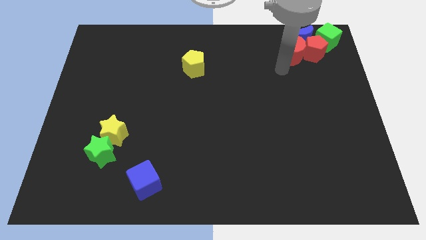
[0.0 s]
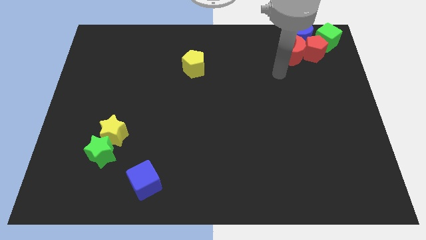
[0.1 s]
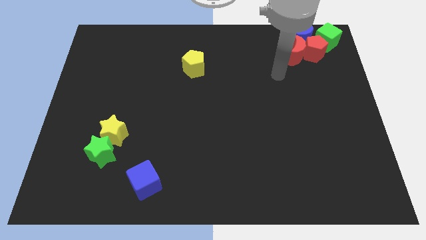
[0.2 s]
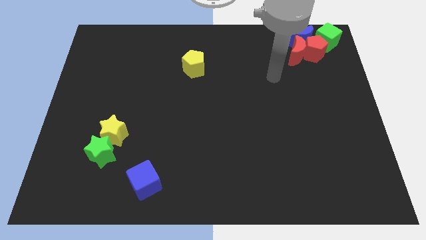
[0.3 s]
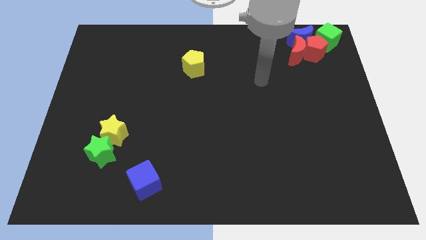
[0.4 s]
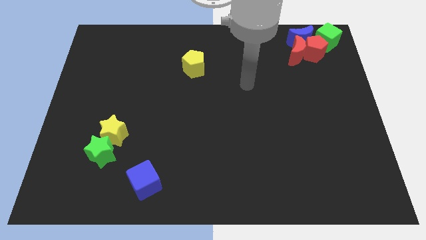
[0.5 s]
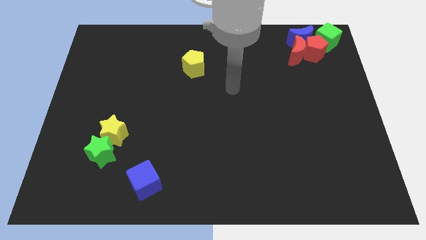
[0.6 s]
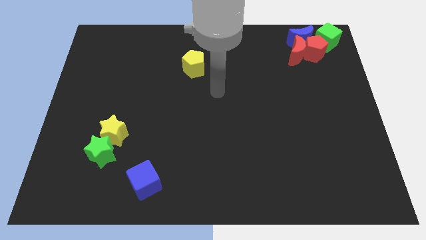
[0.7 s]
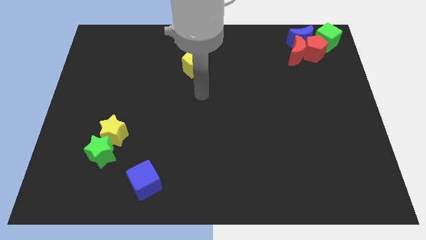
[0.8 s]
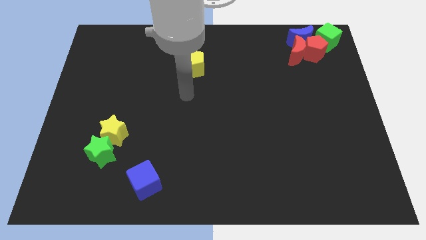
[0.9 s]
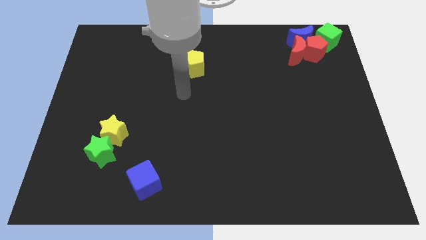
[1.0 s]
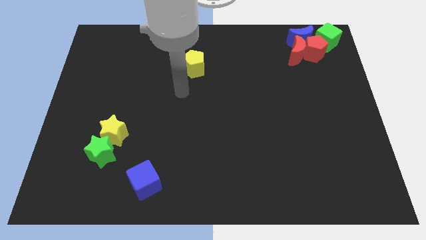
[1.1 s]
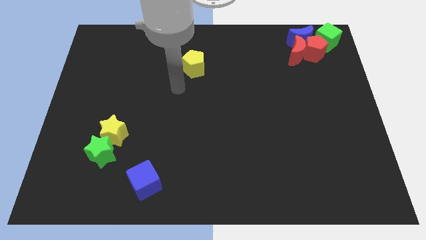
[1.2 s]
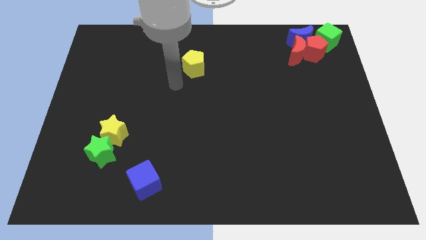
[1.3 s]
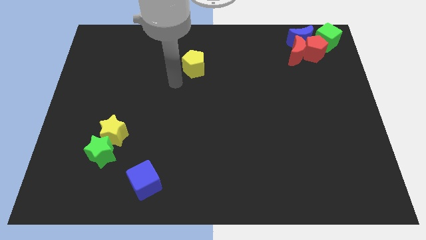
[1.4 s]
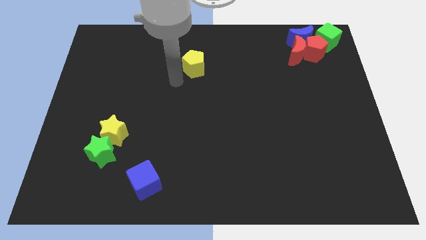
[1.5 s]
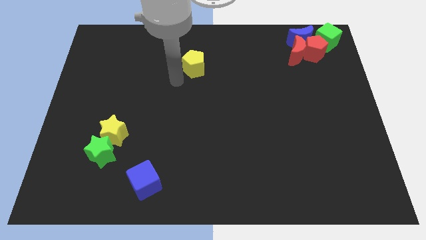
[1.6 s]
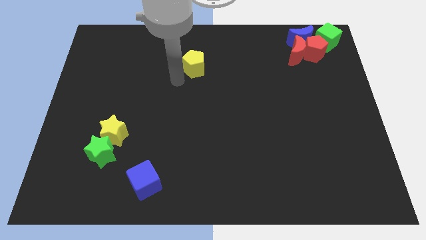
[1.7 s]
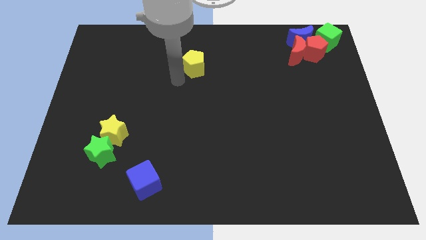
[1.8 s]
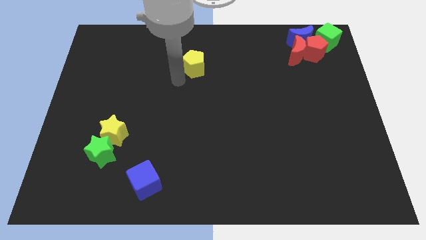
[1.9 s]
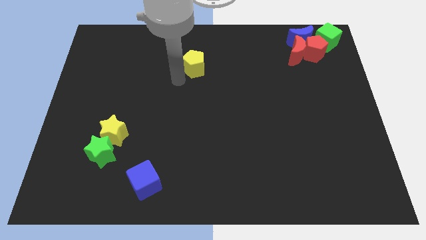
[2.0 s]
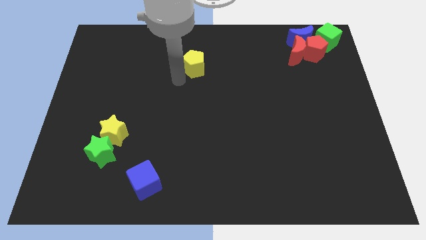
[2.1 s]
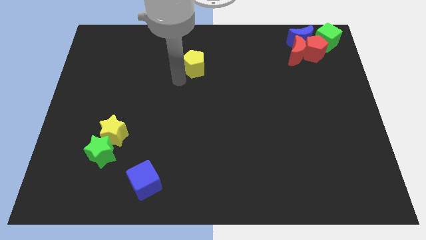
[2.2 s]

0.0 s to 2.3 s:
move your arm diagonal below the yellow pentagon

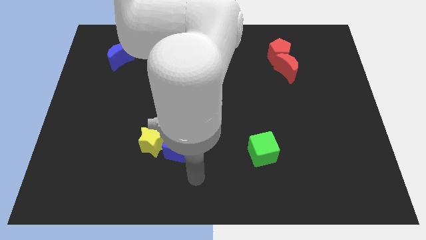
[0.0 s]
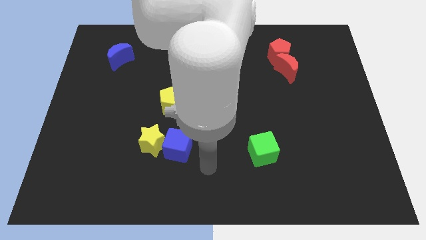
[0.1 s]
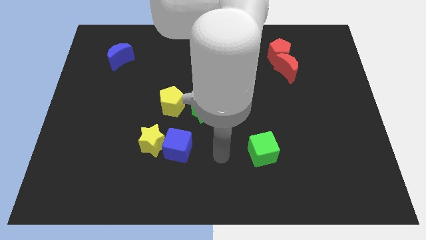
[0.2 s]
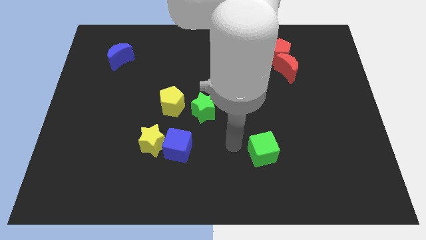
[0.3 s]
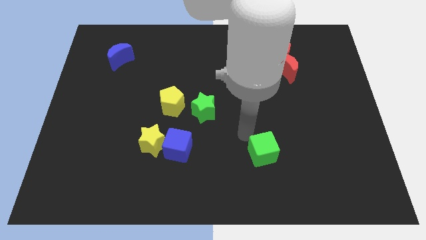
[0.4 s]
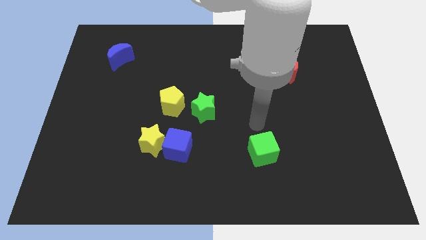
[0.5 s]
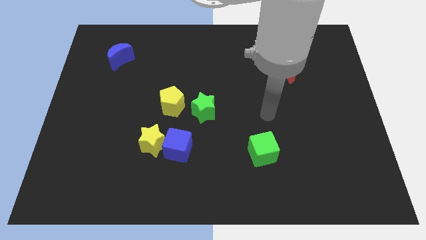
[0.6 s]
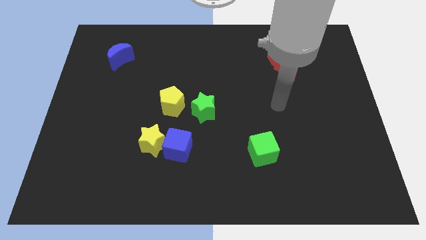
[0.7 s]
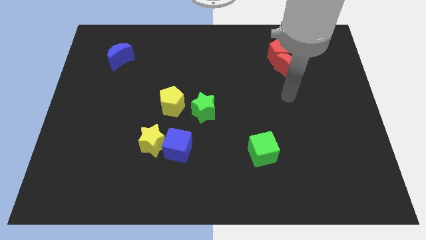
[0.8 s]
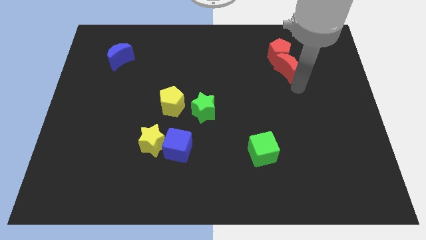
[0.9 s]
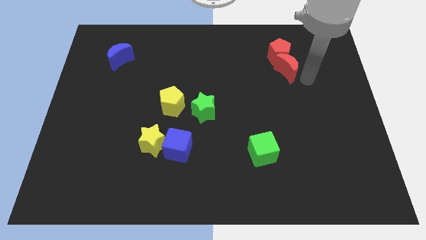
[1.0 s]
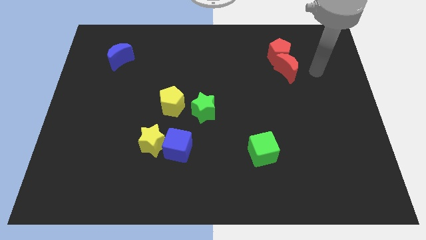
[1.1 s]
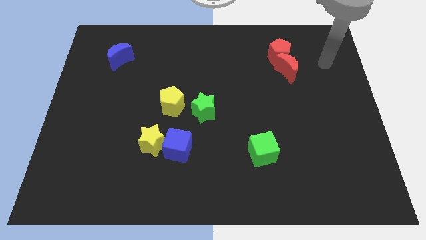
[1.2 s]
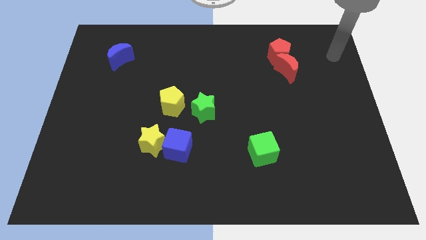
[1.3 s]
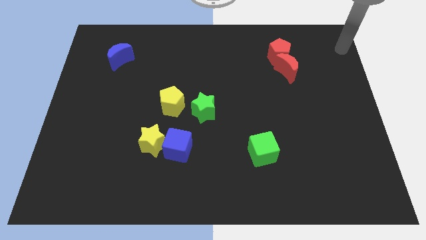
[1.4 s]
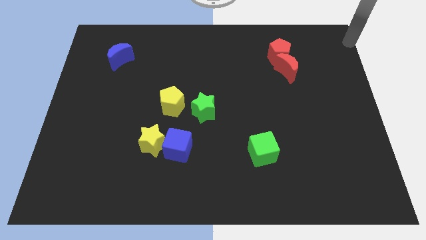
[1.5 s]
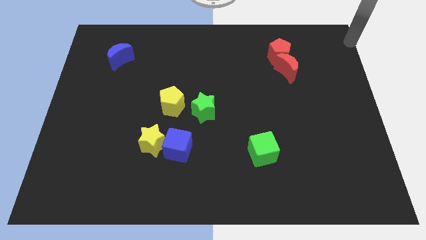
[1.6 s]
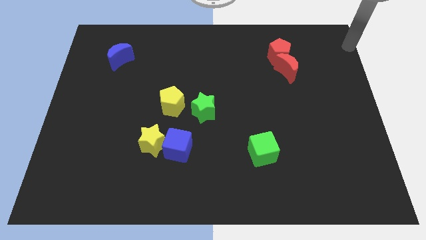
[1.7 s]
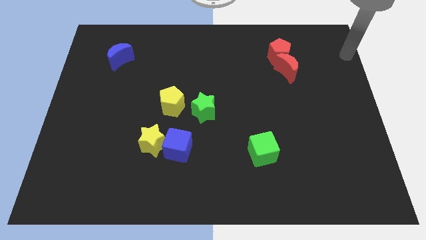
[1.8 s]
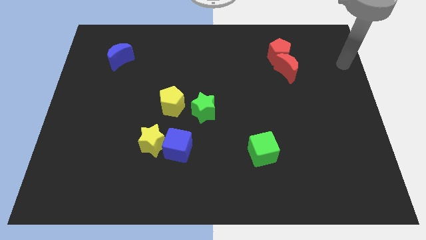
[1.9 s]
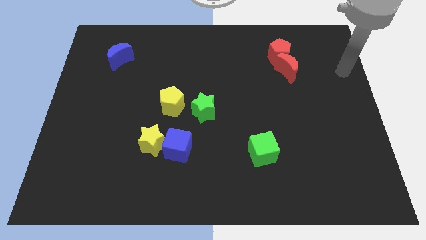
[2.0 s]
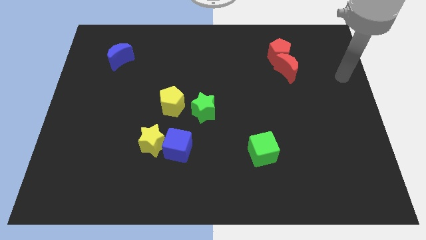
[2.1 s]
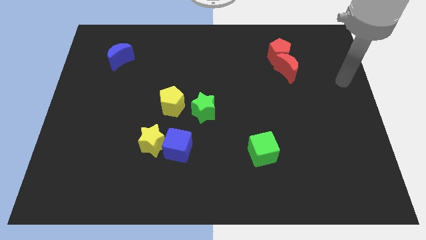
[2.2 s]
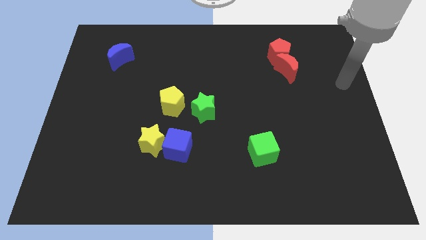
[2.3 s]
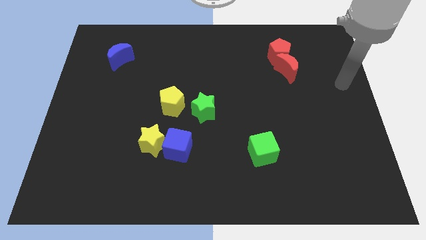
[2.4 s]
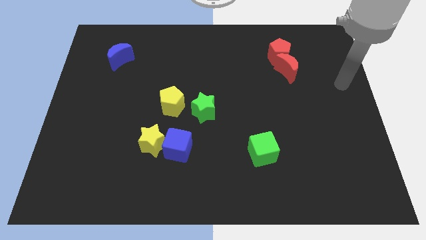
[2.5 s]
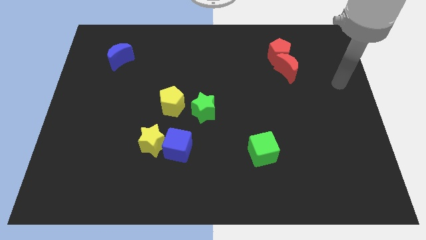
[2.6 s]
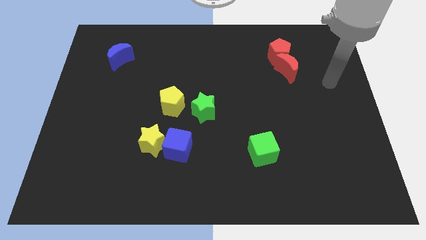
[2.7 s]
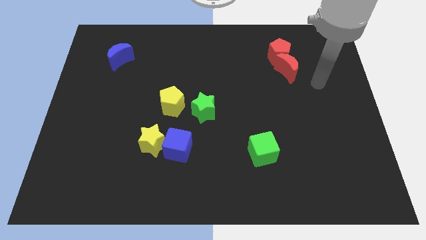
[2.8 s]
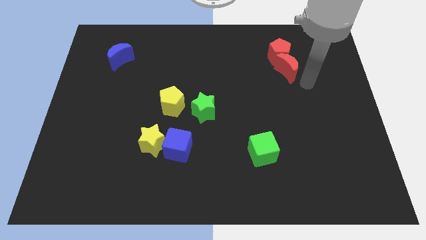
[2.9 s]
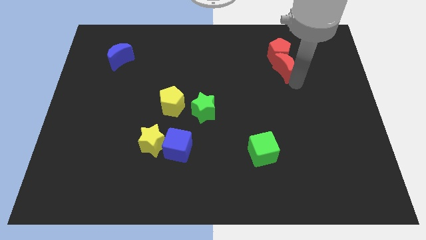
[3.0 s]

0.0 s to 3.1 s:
touch the red crescent at the bottom side

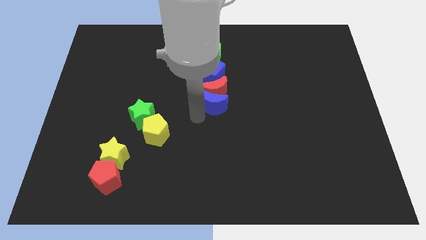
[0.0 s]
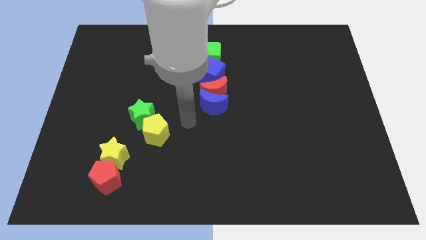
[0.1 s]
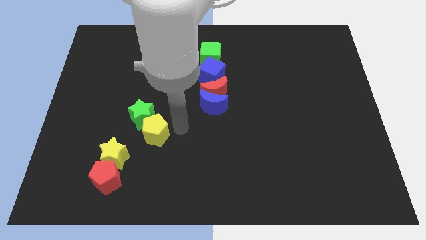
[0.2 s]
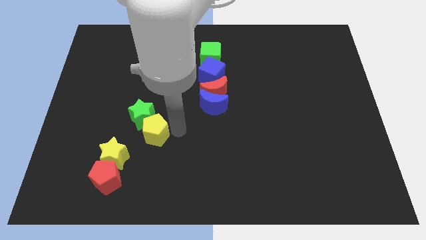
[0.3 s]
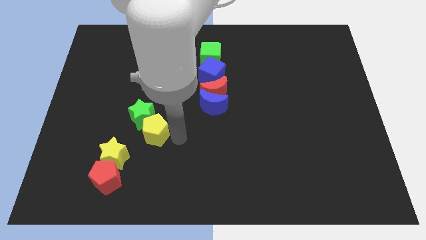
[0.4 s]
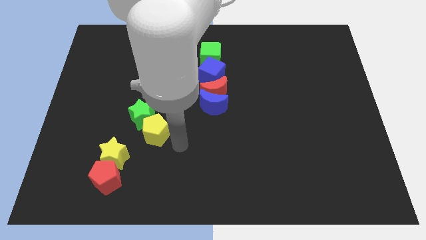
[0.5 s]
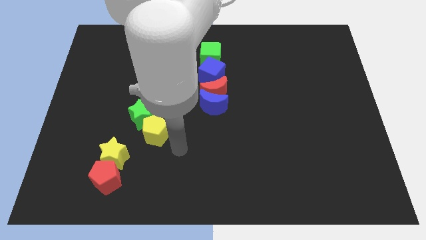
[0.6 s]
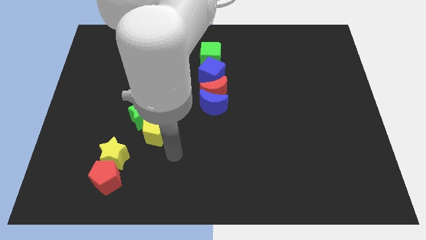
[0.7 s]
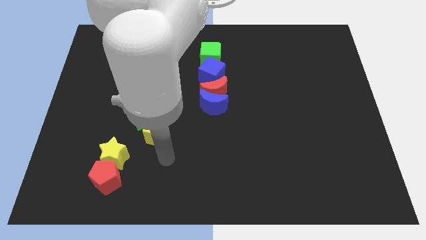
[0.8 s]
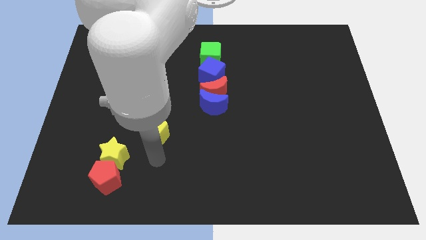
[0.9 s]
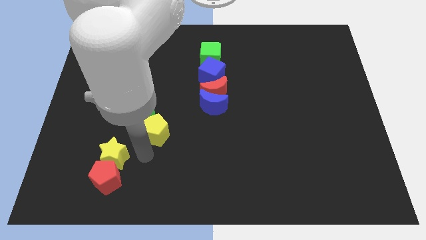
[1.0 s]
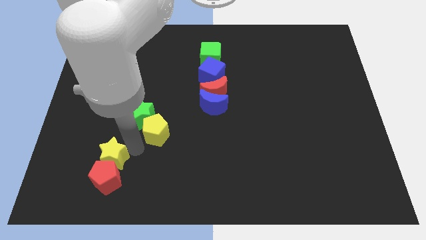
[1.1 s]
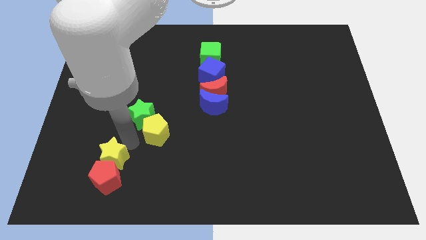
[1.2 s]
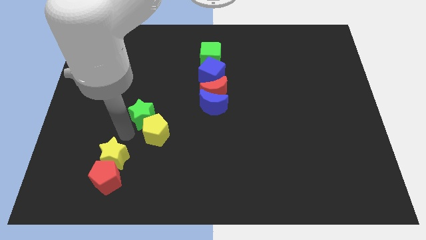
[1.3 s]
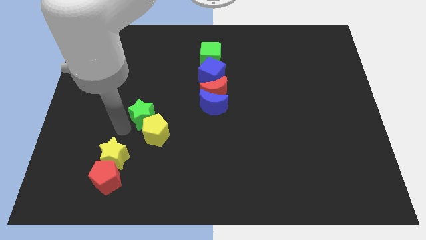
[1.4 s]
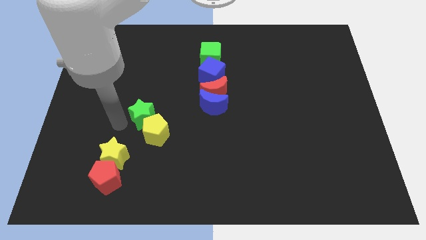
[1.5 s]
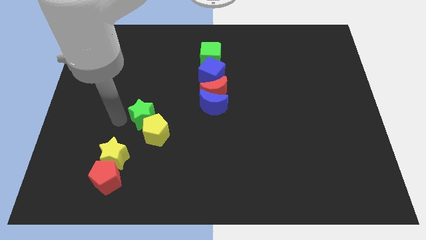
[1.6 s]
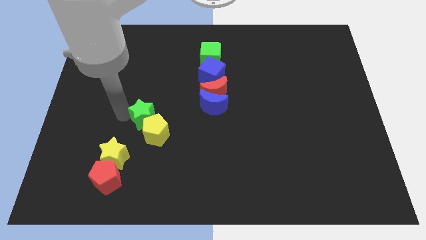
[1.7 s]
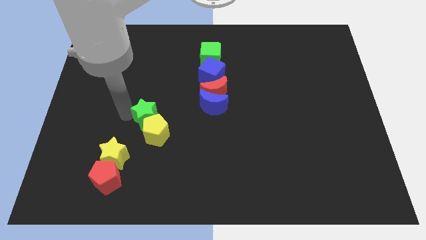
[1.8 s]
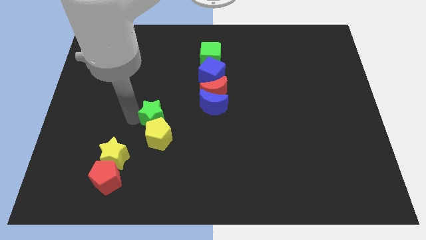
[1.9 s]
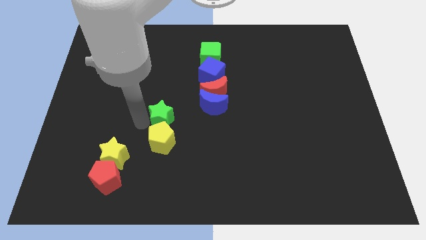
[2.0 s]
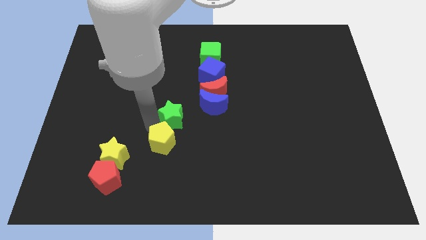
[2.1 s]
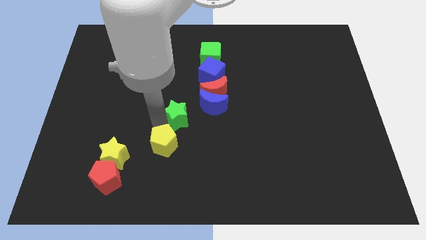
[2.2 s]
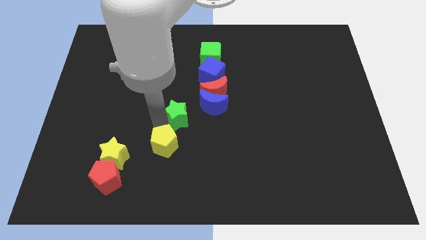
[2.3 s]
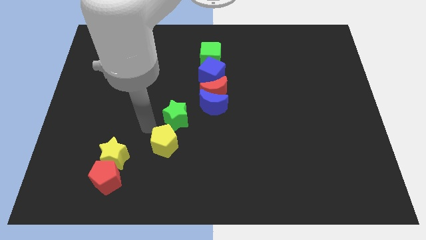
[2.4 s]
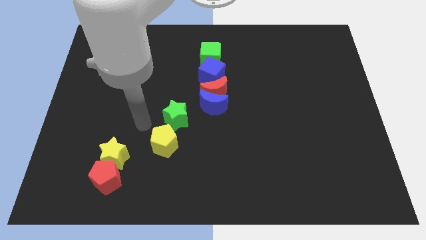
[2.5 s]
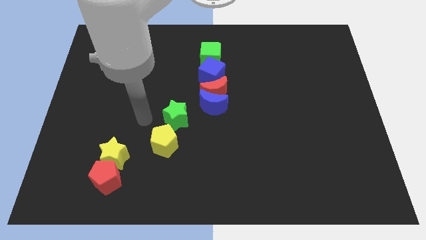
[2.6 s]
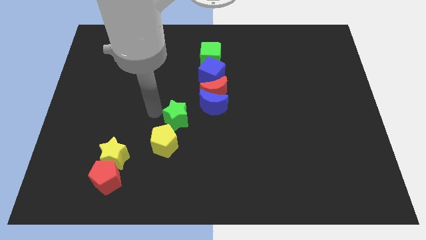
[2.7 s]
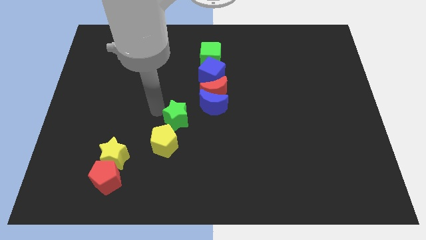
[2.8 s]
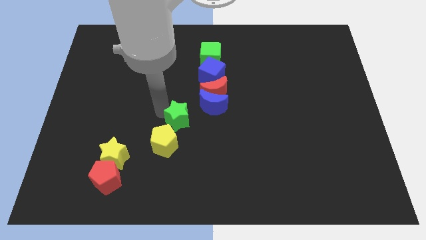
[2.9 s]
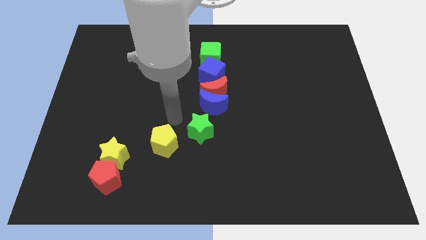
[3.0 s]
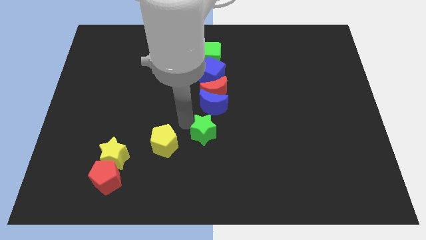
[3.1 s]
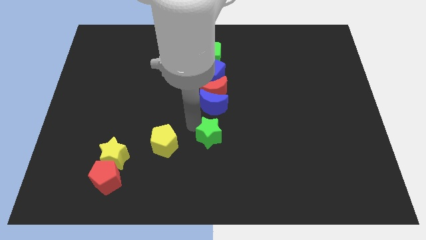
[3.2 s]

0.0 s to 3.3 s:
push the green star to the bottom of the blue crescent

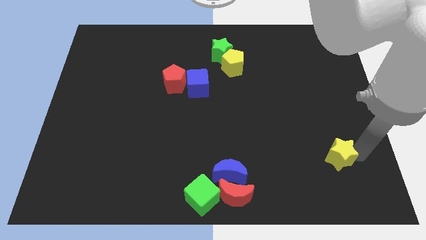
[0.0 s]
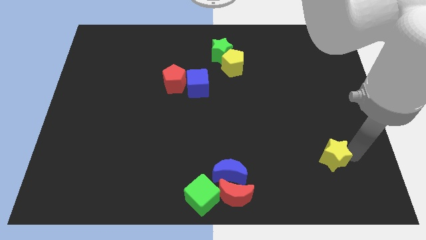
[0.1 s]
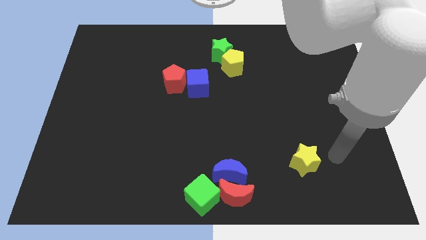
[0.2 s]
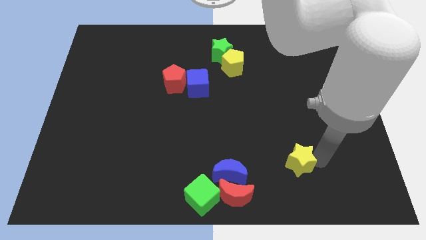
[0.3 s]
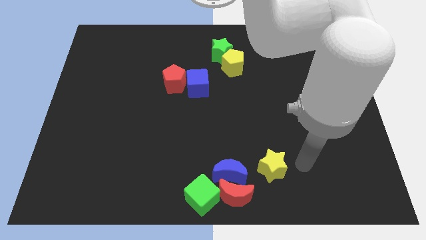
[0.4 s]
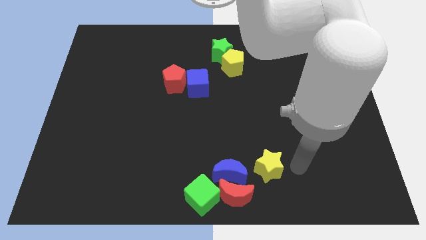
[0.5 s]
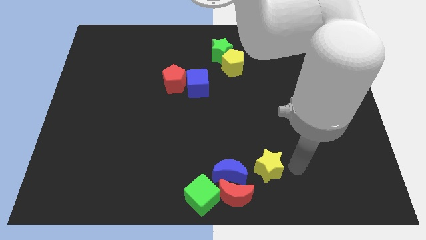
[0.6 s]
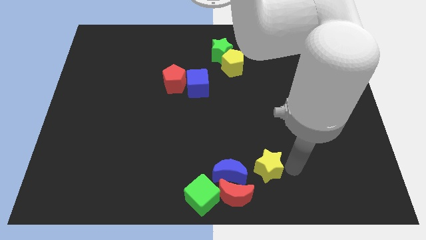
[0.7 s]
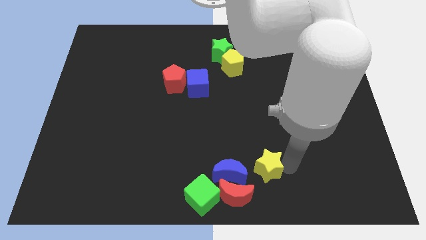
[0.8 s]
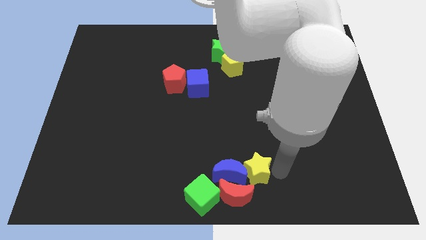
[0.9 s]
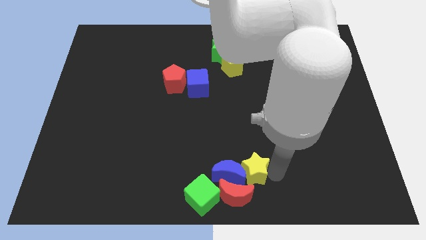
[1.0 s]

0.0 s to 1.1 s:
add the yellow star to the group of the block at the bottom center of the board
